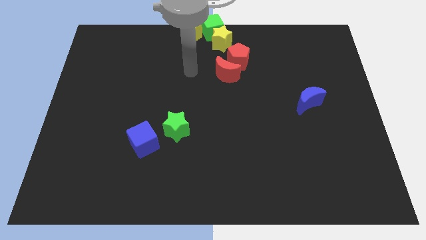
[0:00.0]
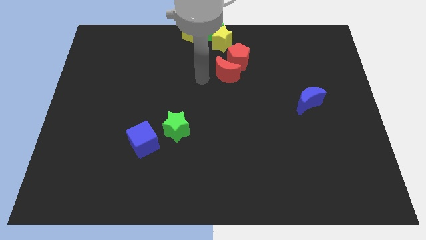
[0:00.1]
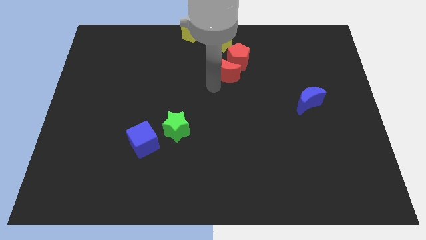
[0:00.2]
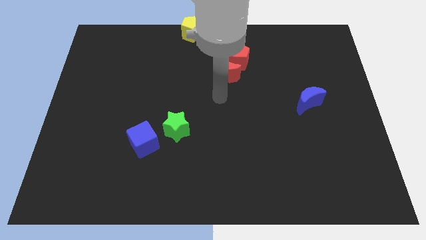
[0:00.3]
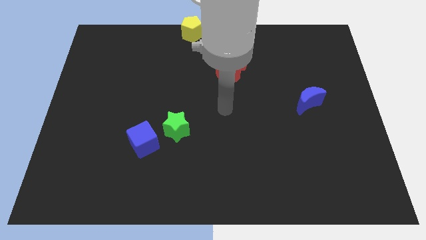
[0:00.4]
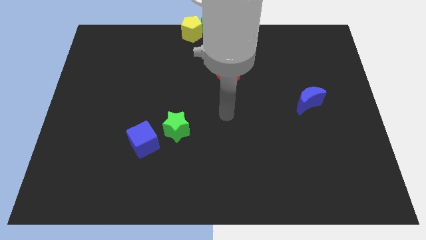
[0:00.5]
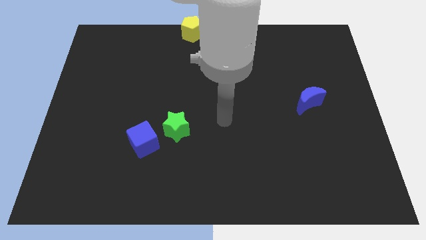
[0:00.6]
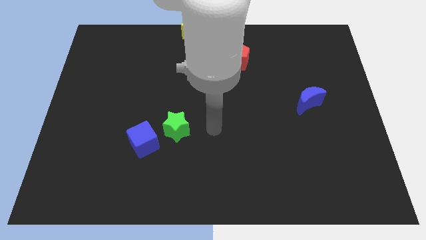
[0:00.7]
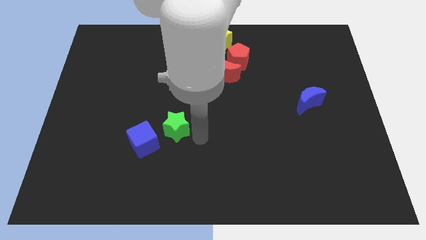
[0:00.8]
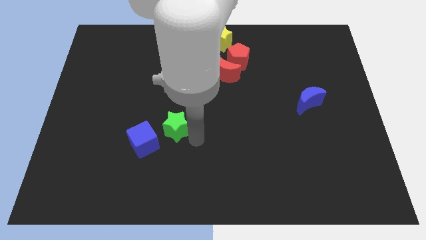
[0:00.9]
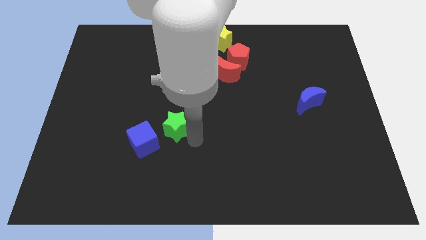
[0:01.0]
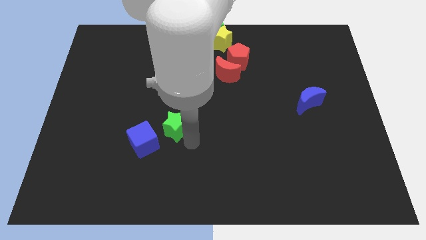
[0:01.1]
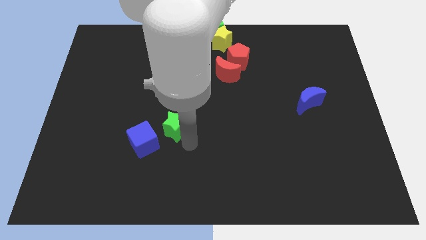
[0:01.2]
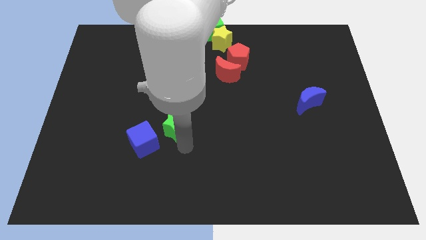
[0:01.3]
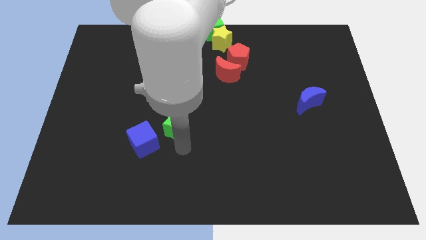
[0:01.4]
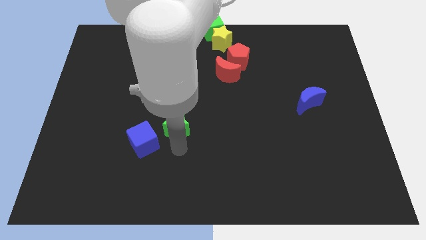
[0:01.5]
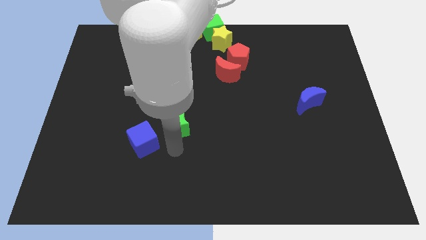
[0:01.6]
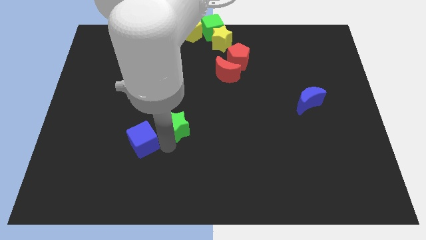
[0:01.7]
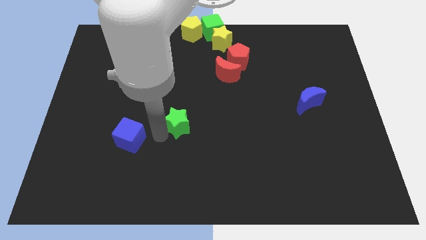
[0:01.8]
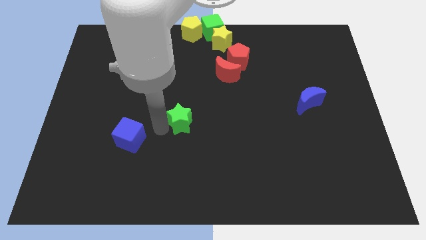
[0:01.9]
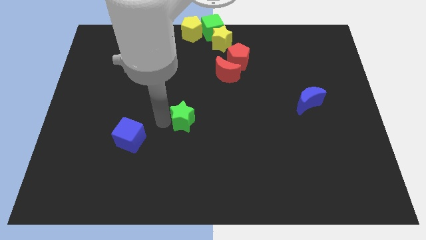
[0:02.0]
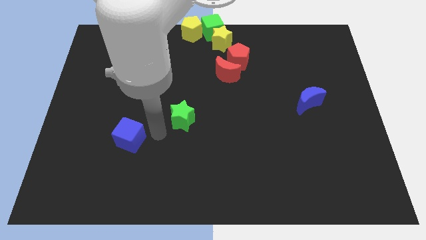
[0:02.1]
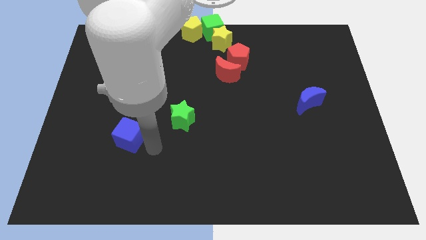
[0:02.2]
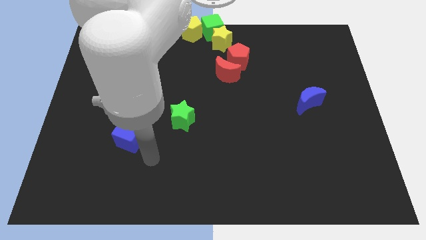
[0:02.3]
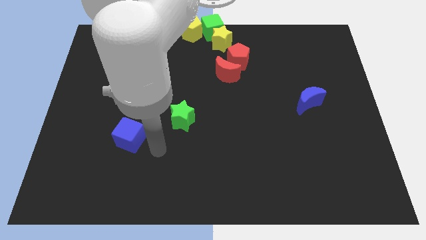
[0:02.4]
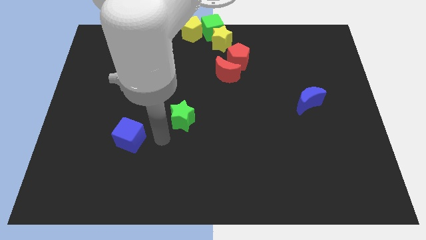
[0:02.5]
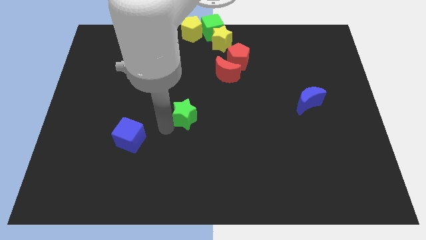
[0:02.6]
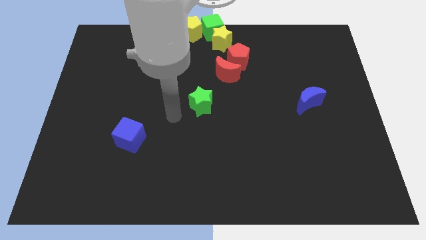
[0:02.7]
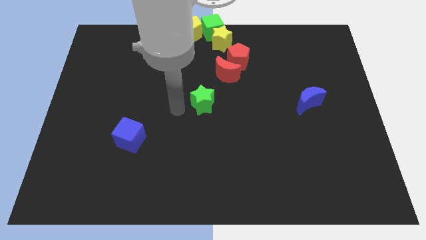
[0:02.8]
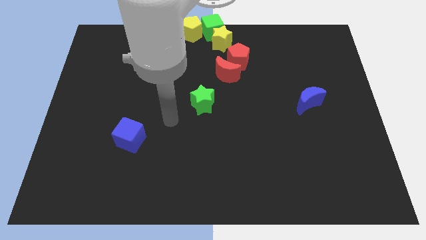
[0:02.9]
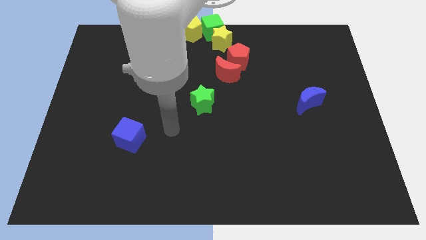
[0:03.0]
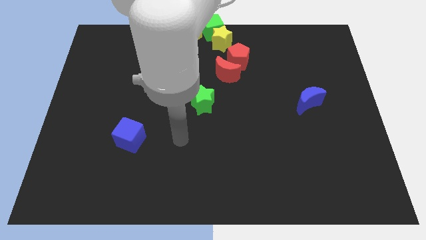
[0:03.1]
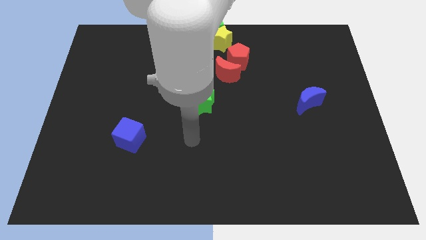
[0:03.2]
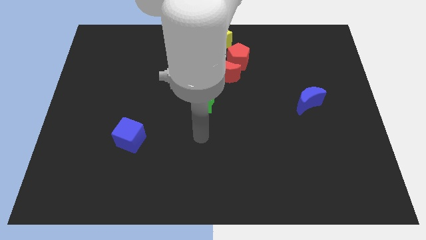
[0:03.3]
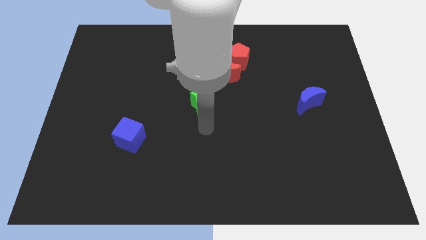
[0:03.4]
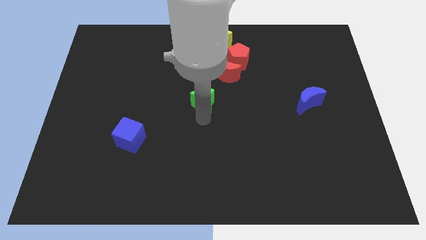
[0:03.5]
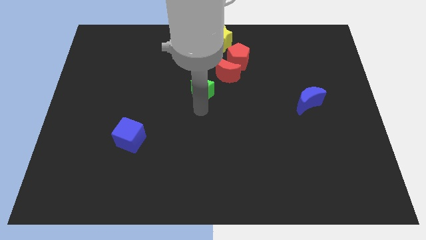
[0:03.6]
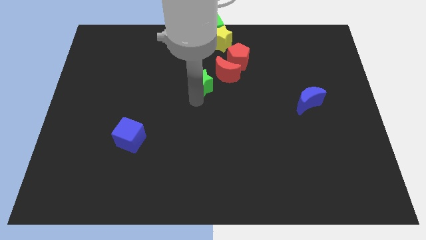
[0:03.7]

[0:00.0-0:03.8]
separate the green star and the blue cube

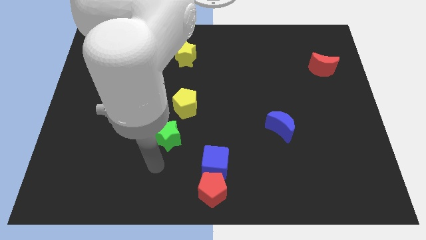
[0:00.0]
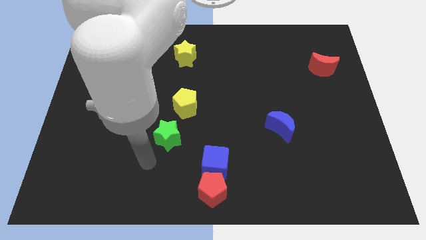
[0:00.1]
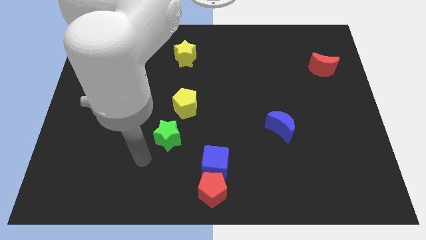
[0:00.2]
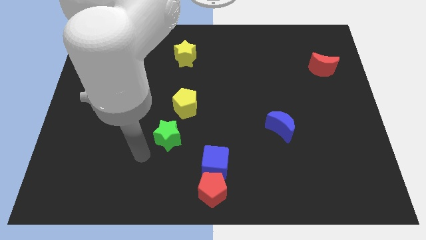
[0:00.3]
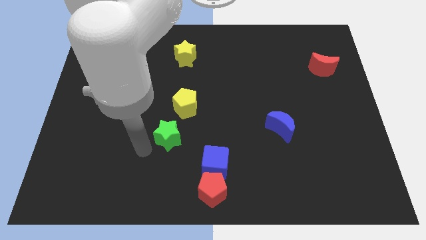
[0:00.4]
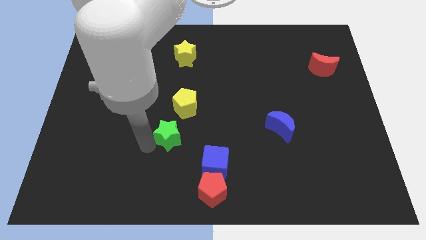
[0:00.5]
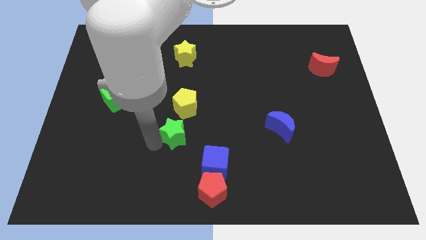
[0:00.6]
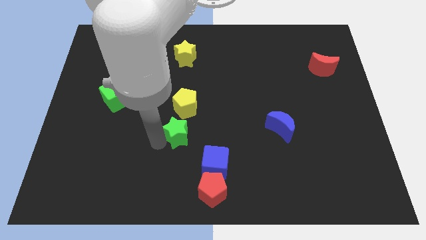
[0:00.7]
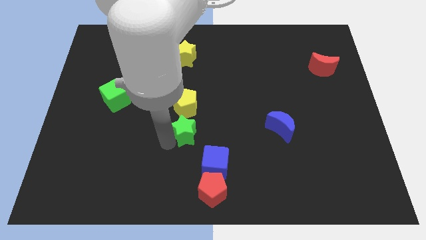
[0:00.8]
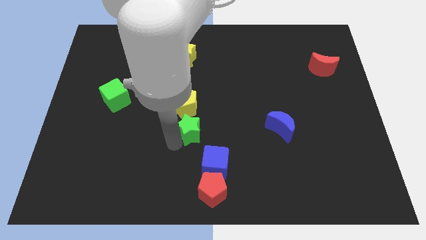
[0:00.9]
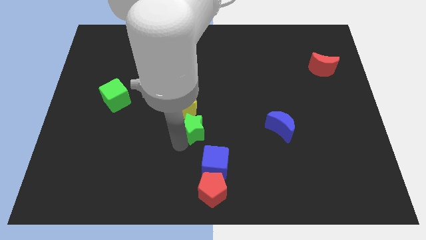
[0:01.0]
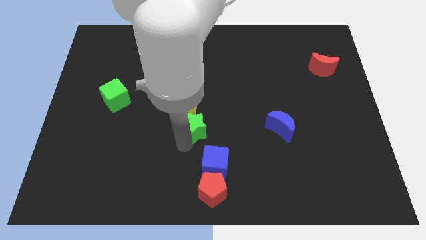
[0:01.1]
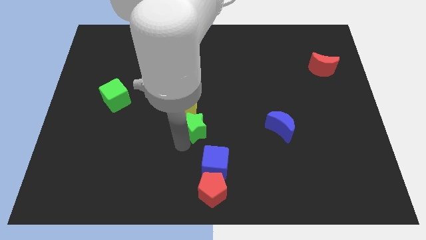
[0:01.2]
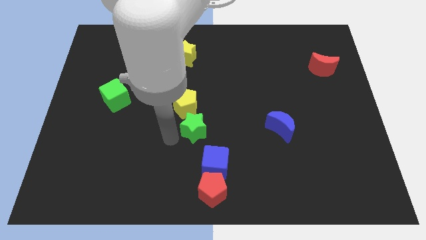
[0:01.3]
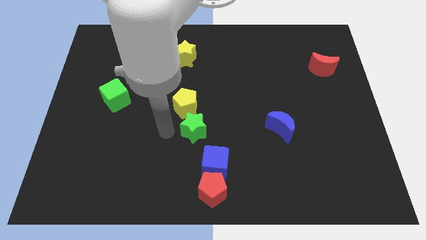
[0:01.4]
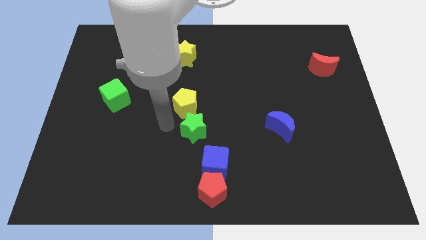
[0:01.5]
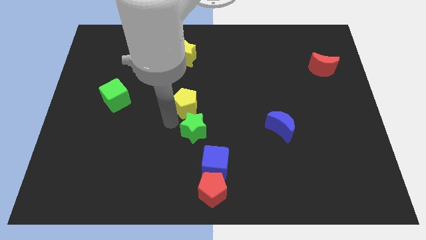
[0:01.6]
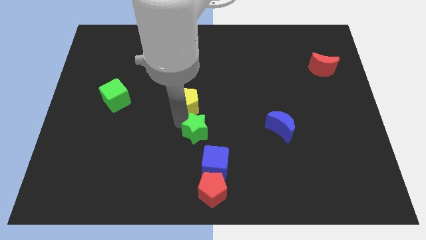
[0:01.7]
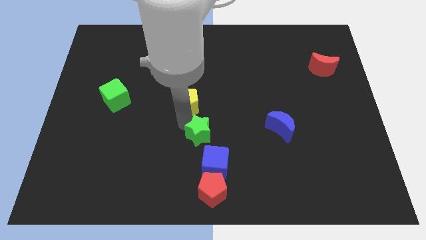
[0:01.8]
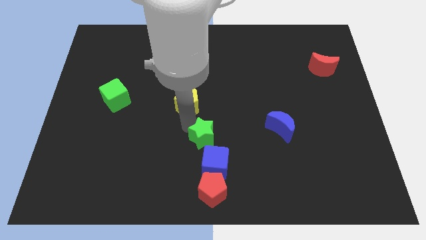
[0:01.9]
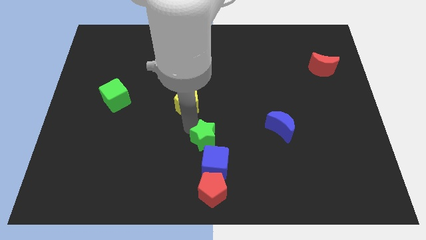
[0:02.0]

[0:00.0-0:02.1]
slide the green star to the top left of blue cube

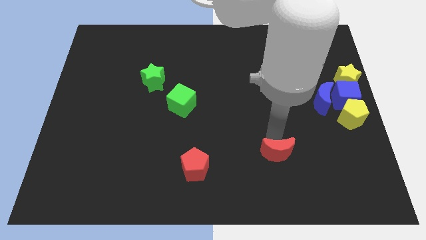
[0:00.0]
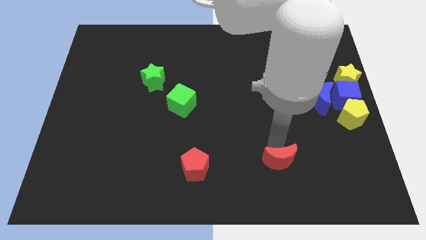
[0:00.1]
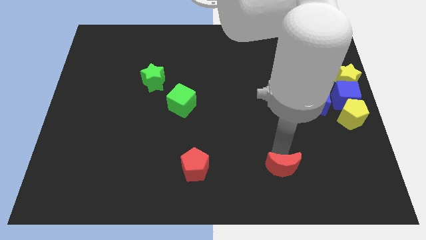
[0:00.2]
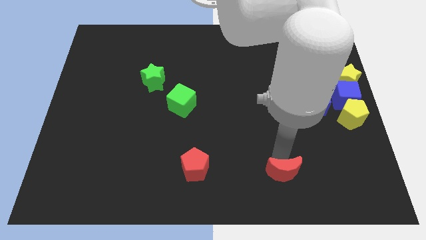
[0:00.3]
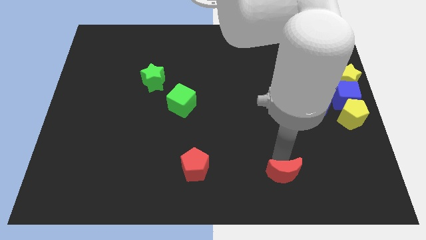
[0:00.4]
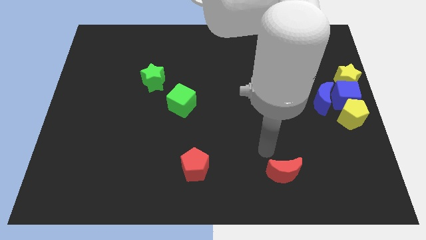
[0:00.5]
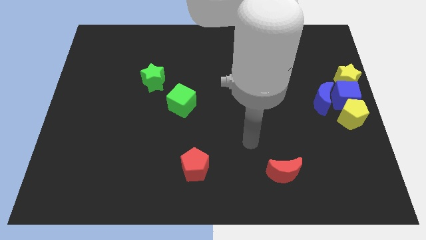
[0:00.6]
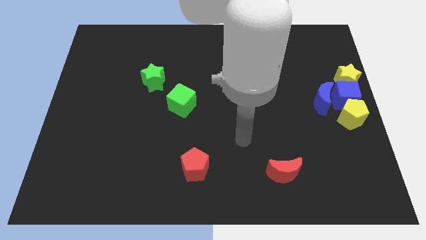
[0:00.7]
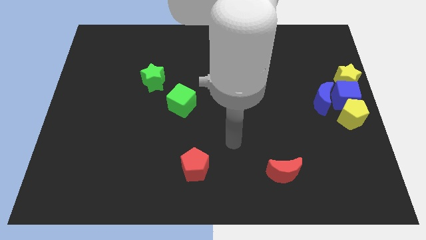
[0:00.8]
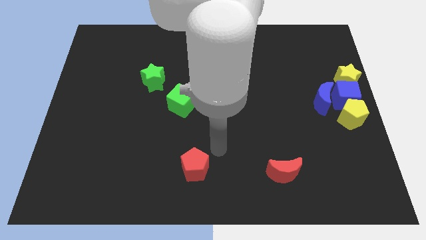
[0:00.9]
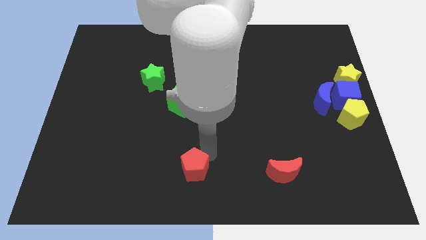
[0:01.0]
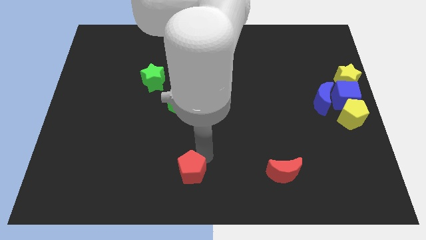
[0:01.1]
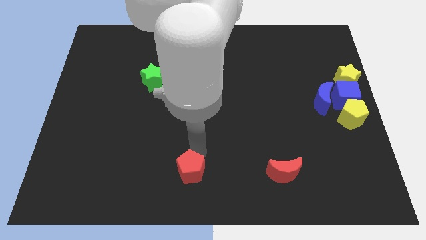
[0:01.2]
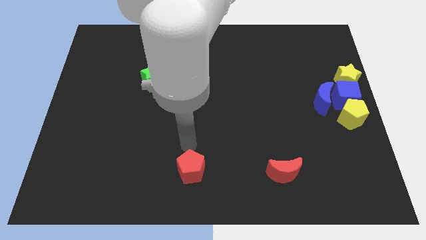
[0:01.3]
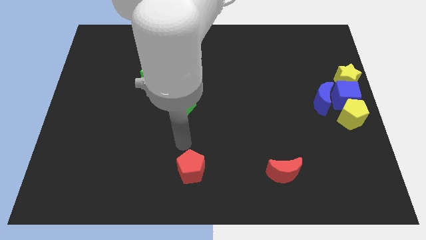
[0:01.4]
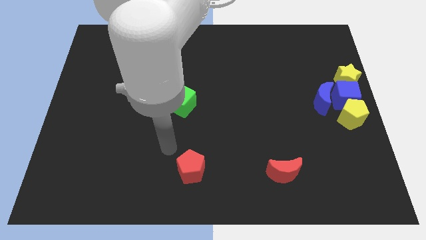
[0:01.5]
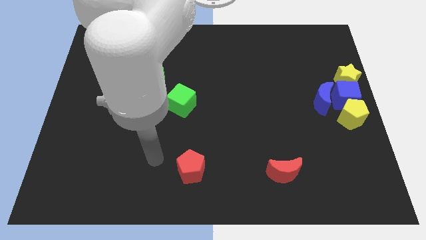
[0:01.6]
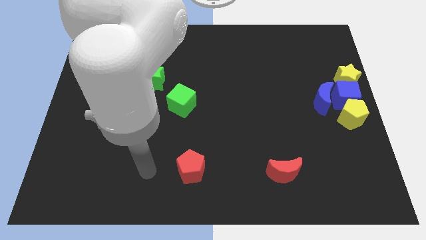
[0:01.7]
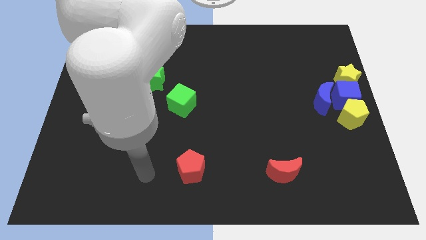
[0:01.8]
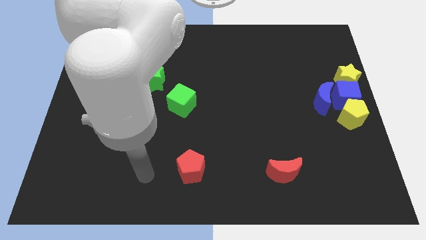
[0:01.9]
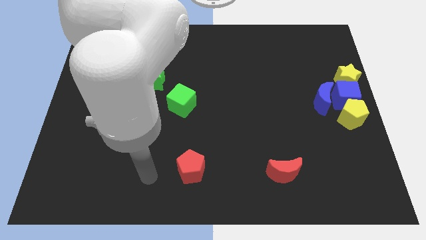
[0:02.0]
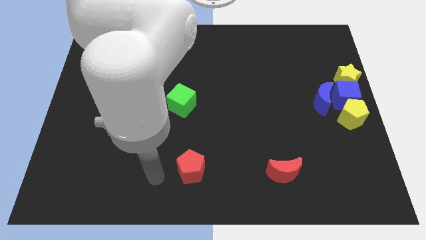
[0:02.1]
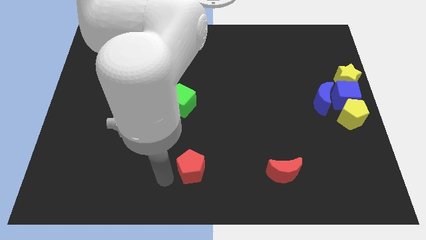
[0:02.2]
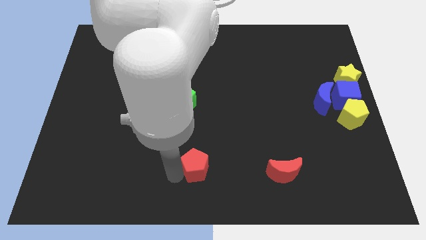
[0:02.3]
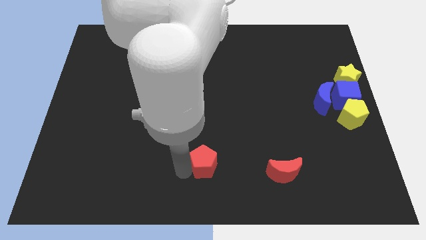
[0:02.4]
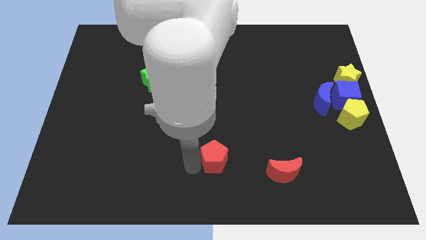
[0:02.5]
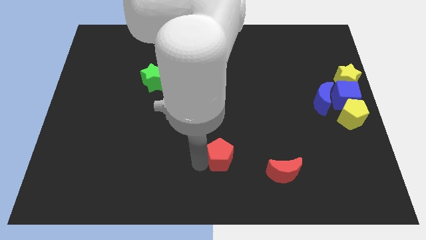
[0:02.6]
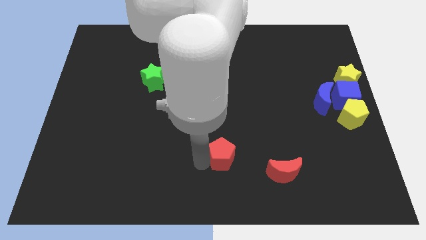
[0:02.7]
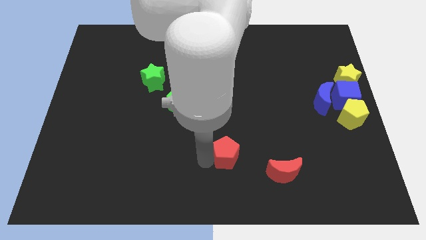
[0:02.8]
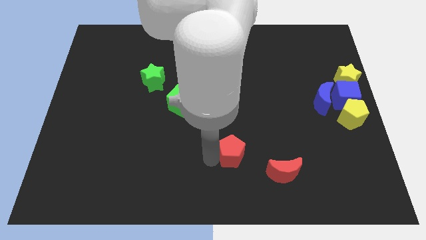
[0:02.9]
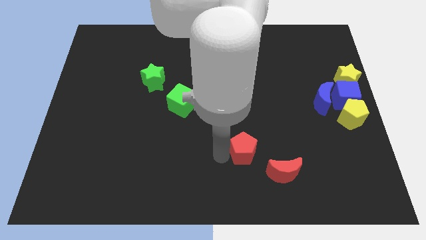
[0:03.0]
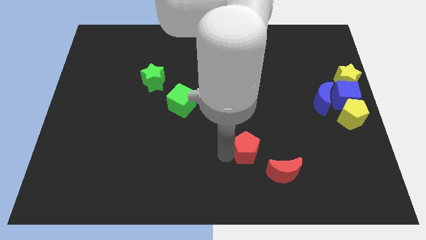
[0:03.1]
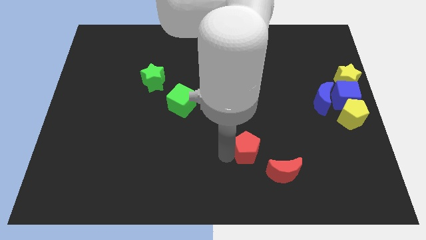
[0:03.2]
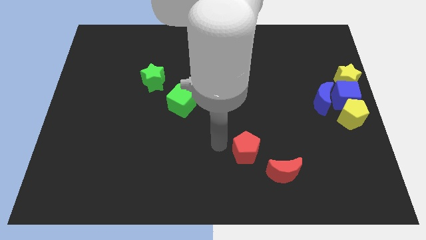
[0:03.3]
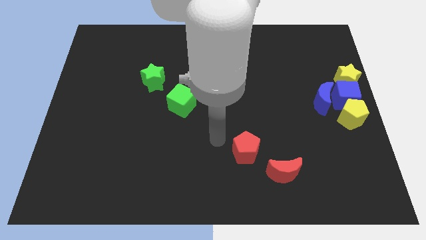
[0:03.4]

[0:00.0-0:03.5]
move the red moon and red pentagon diagonally at the bottom right side of the green cube
